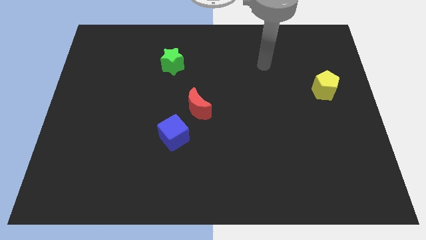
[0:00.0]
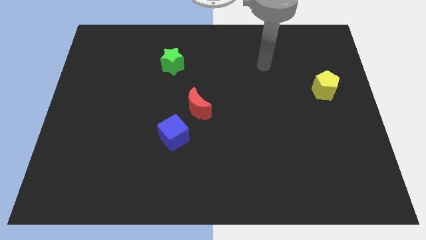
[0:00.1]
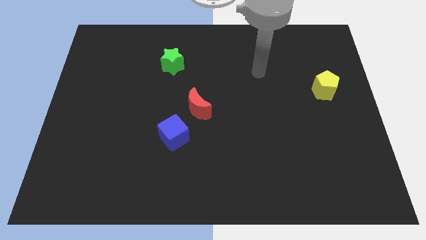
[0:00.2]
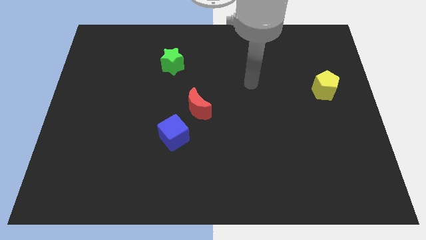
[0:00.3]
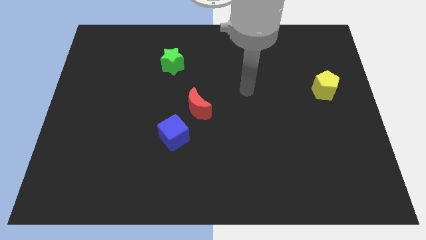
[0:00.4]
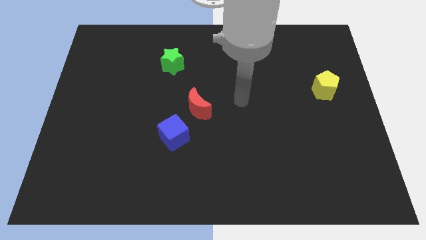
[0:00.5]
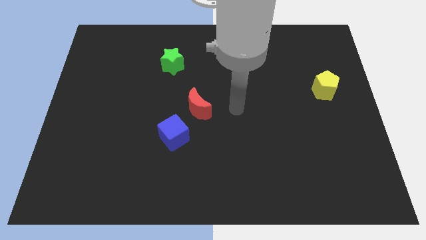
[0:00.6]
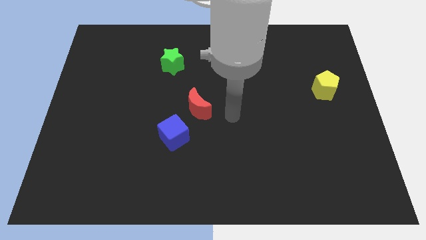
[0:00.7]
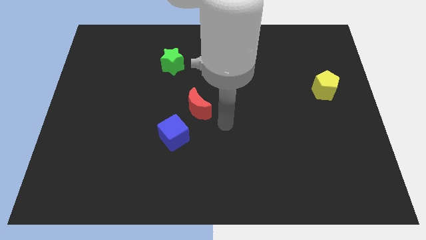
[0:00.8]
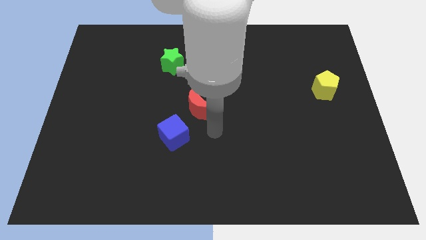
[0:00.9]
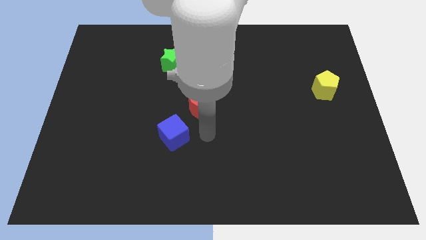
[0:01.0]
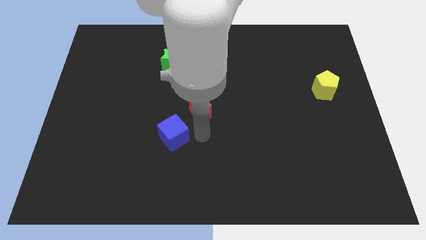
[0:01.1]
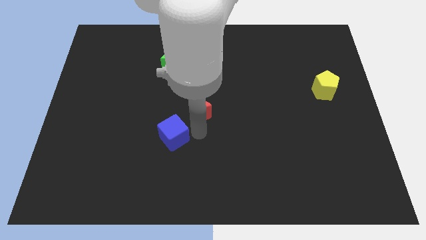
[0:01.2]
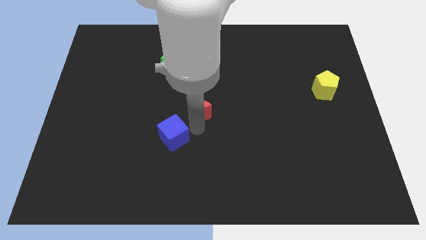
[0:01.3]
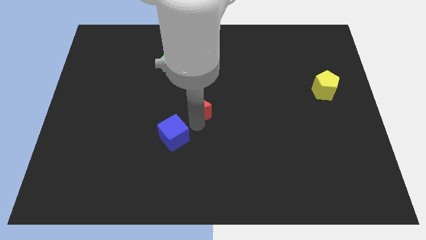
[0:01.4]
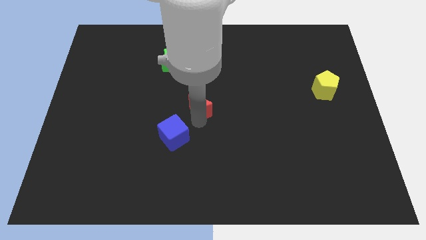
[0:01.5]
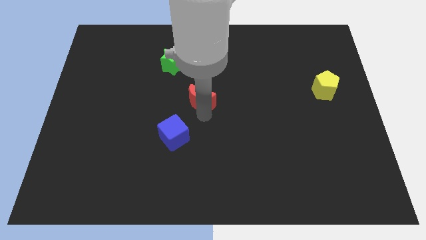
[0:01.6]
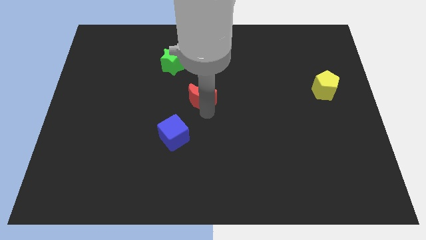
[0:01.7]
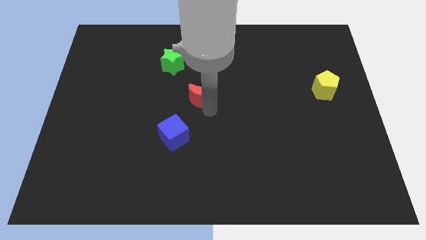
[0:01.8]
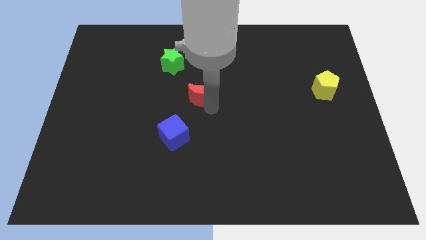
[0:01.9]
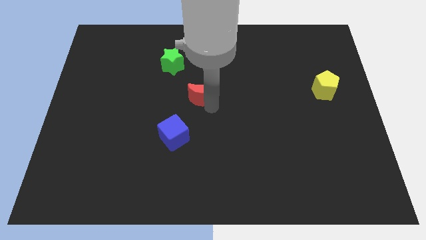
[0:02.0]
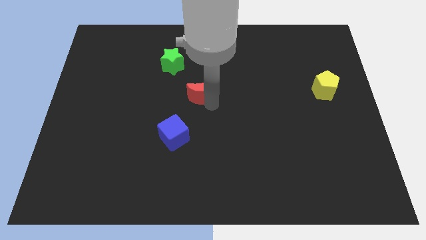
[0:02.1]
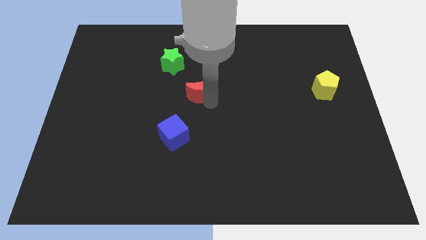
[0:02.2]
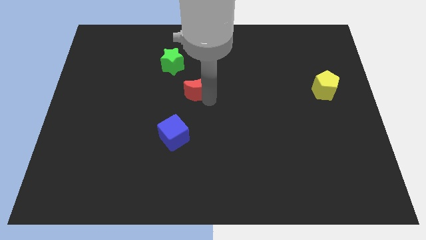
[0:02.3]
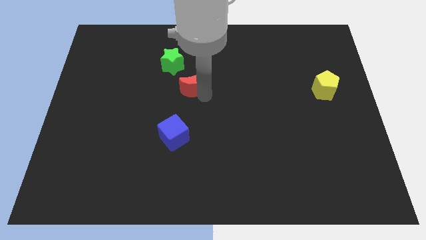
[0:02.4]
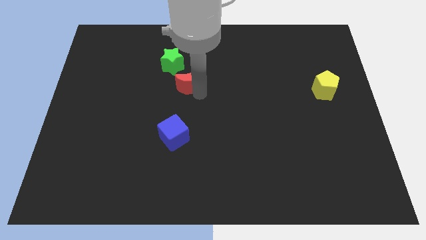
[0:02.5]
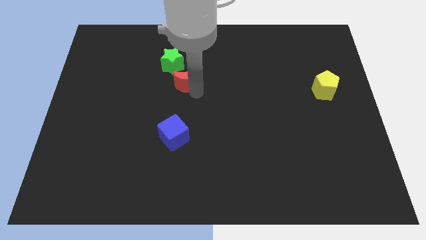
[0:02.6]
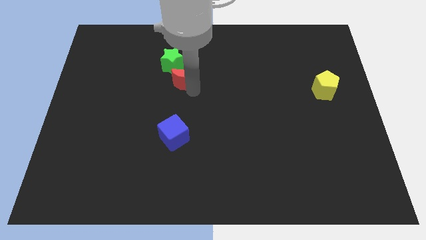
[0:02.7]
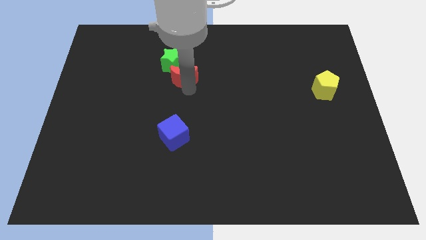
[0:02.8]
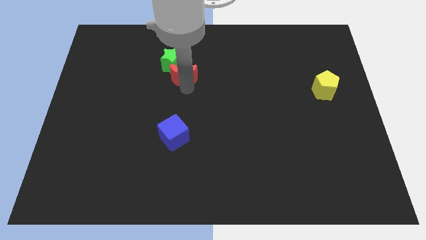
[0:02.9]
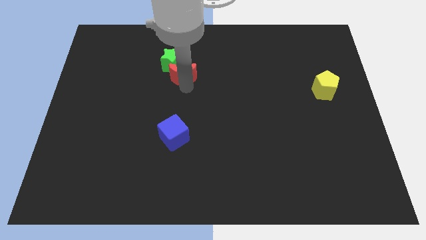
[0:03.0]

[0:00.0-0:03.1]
put the red block next to the green block

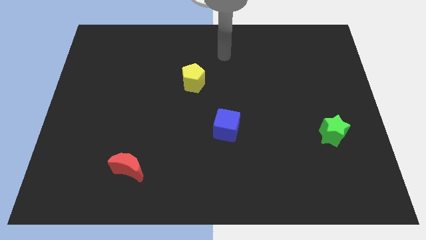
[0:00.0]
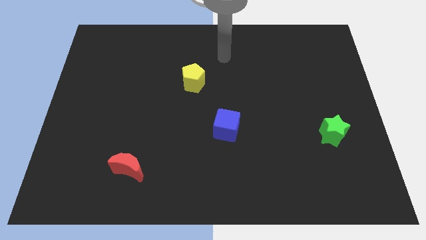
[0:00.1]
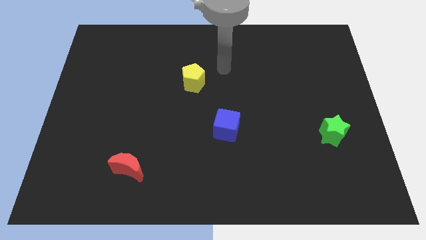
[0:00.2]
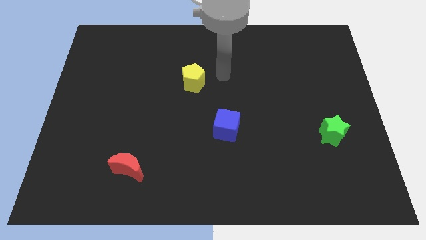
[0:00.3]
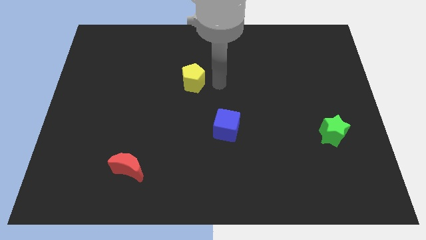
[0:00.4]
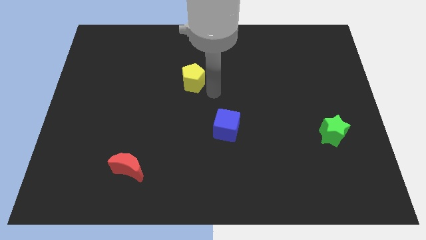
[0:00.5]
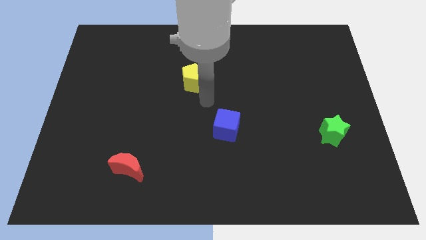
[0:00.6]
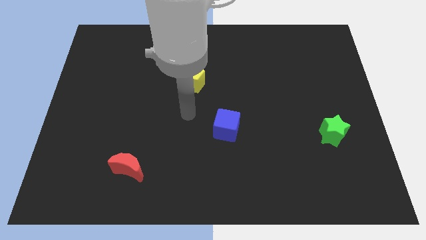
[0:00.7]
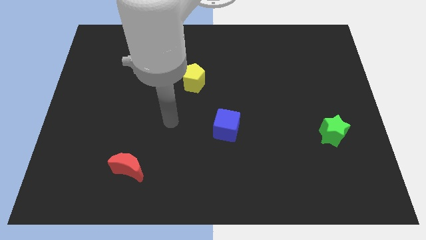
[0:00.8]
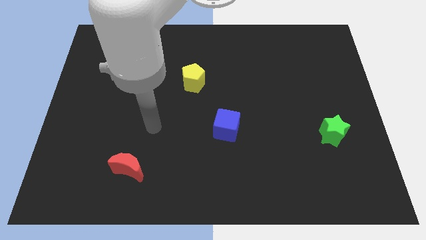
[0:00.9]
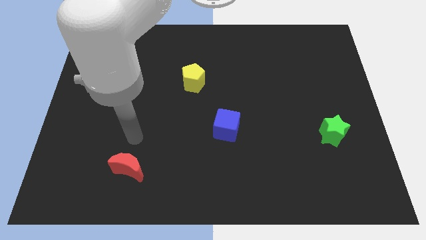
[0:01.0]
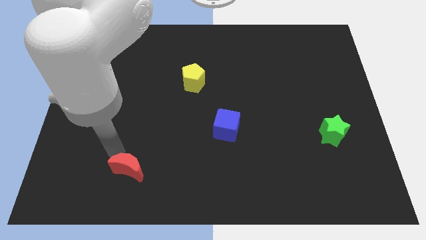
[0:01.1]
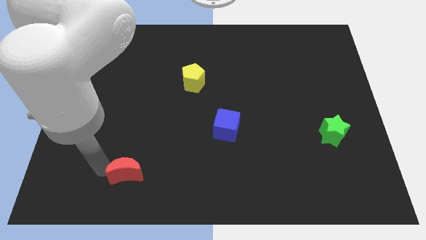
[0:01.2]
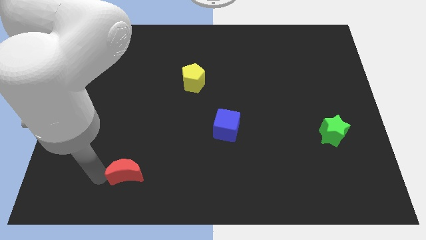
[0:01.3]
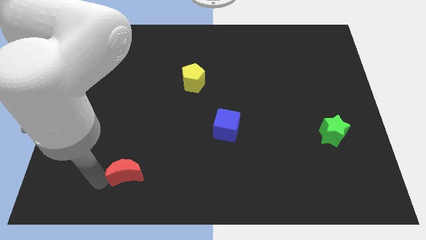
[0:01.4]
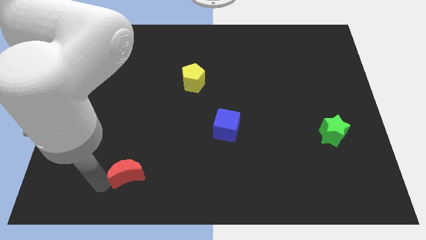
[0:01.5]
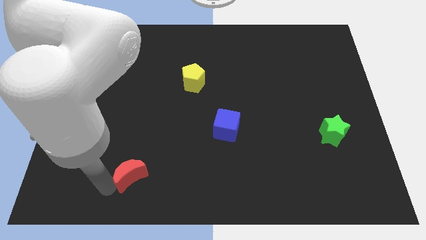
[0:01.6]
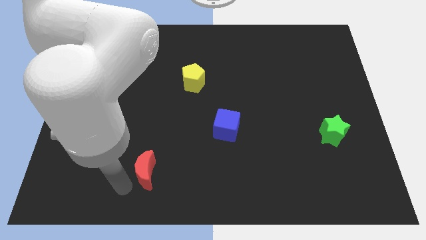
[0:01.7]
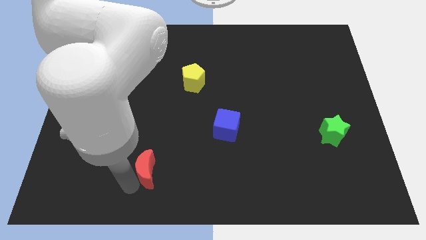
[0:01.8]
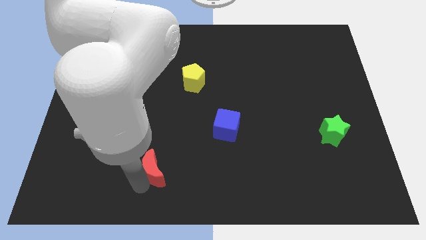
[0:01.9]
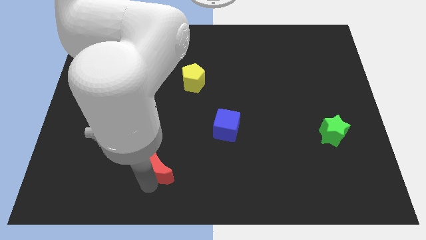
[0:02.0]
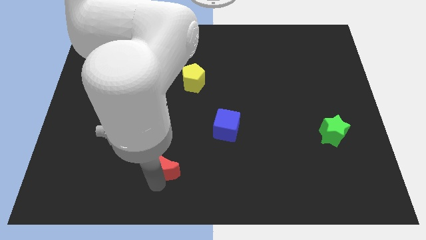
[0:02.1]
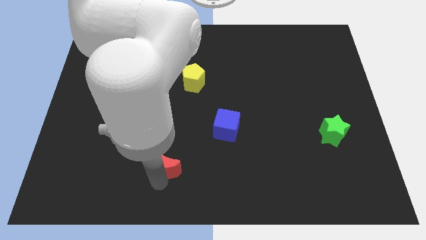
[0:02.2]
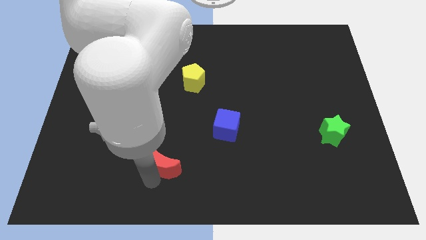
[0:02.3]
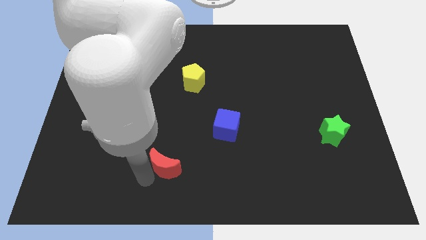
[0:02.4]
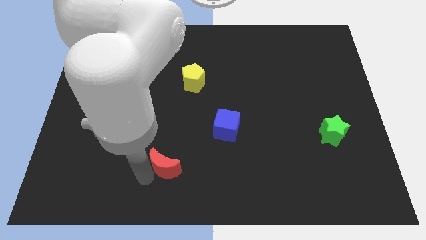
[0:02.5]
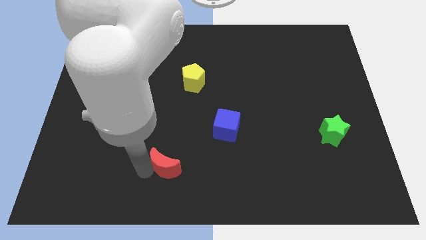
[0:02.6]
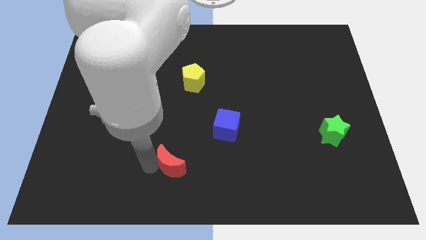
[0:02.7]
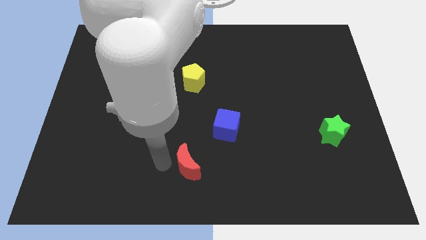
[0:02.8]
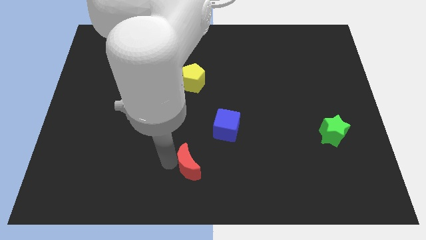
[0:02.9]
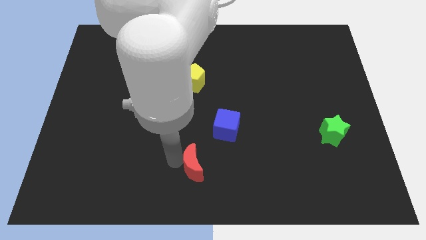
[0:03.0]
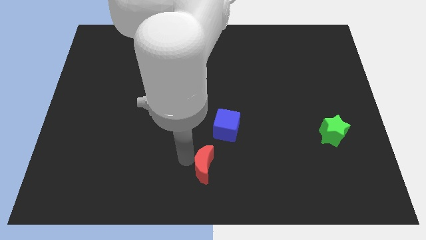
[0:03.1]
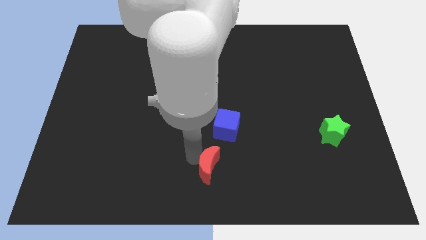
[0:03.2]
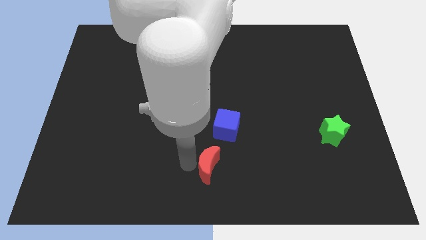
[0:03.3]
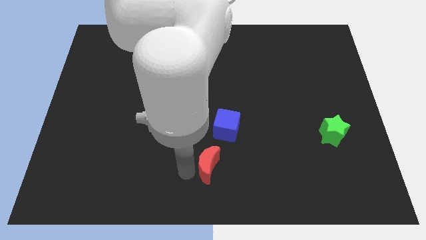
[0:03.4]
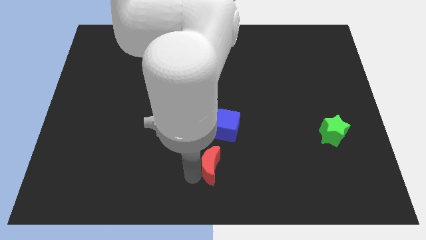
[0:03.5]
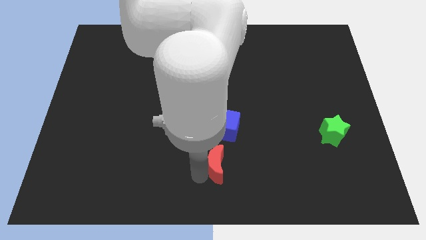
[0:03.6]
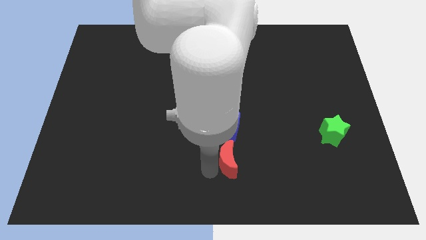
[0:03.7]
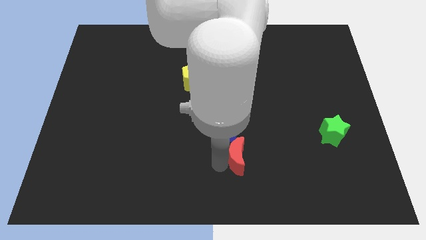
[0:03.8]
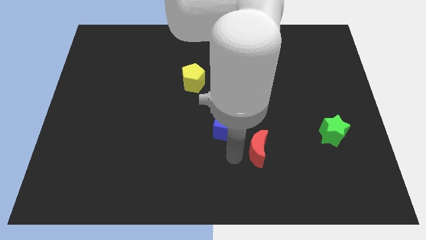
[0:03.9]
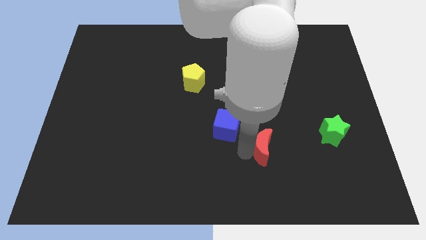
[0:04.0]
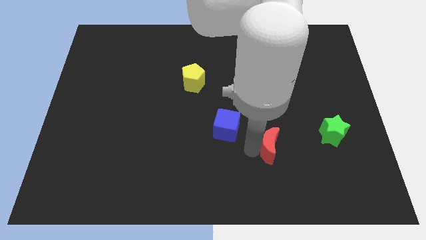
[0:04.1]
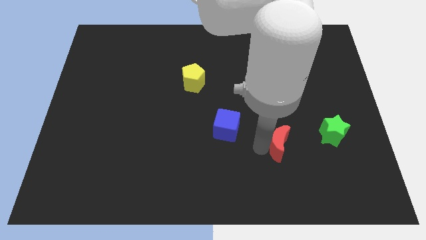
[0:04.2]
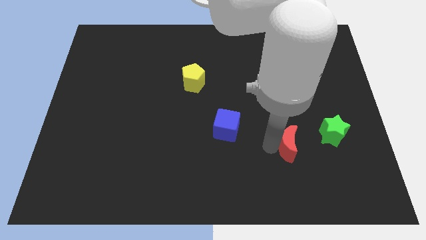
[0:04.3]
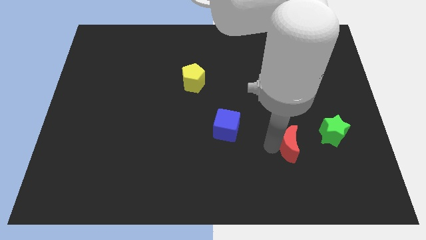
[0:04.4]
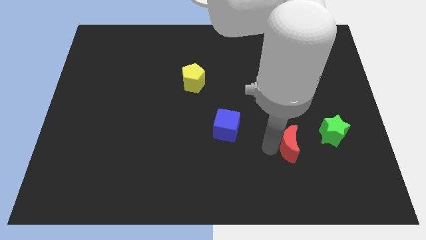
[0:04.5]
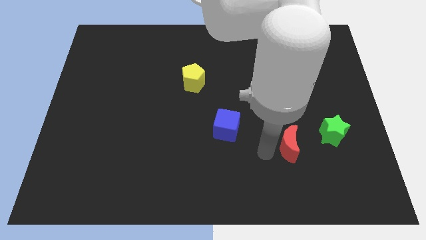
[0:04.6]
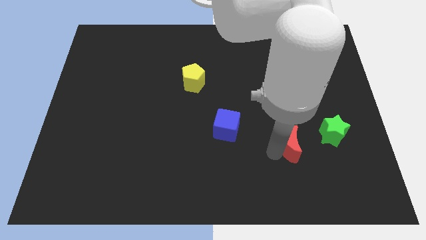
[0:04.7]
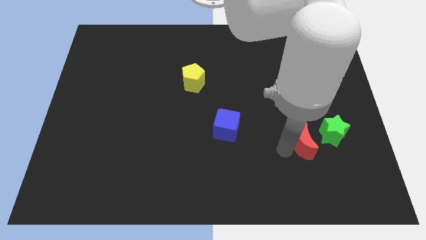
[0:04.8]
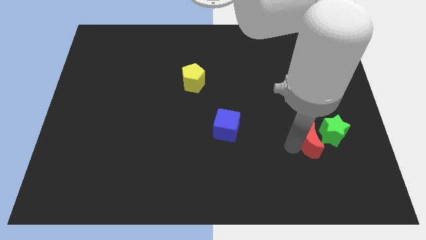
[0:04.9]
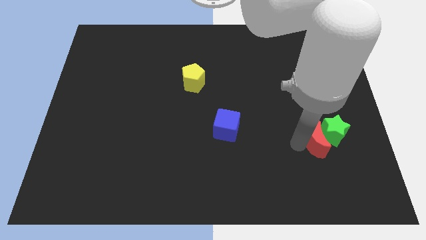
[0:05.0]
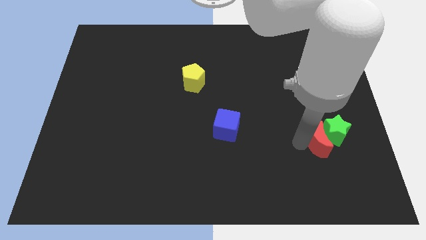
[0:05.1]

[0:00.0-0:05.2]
move the red block next to the star

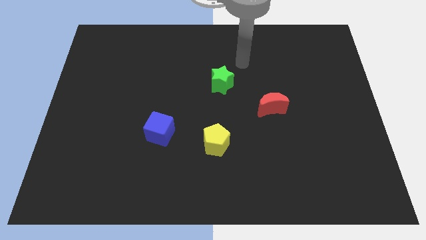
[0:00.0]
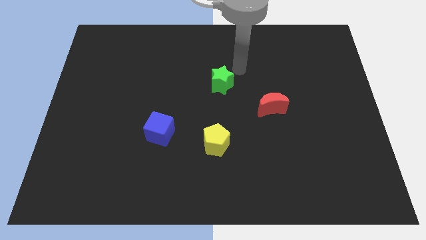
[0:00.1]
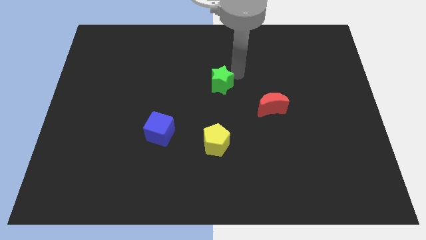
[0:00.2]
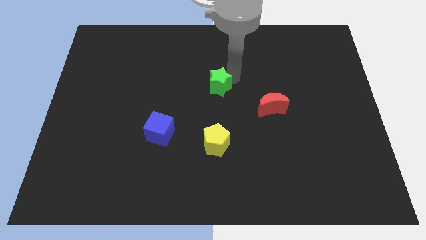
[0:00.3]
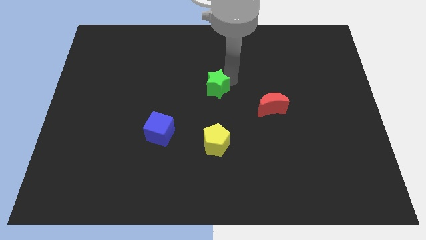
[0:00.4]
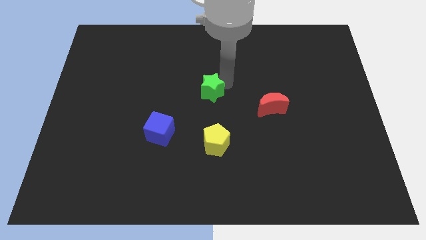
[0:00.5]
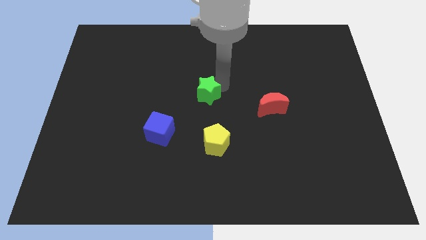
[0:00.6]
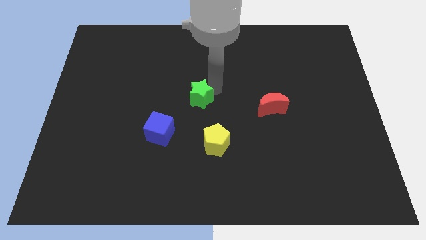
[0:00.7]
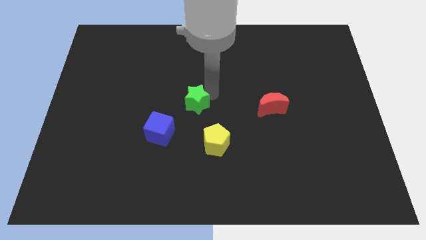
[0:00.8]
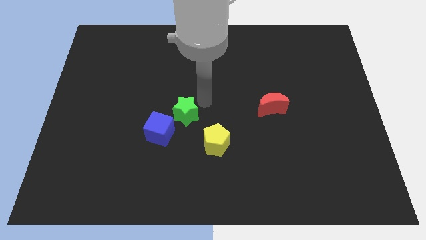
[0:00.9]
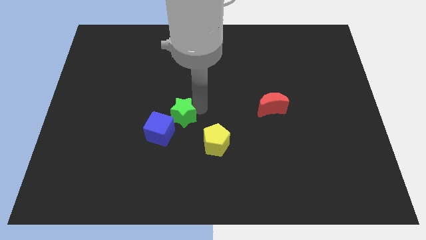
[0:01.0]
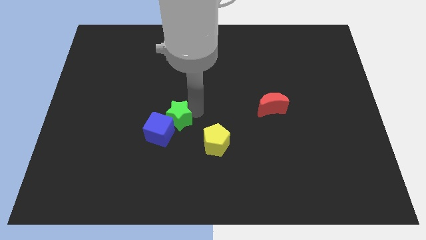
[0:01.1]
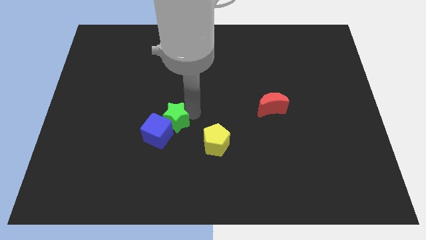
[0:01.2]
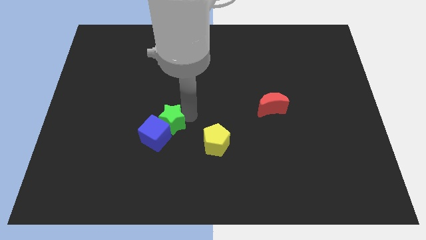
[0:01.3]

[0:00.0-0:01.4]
put the green star towards the blue cube
